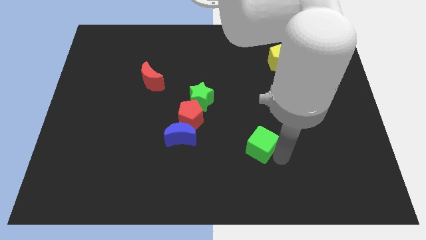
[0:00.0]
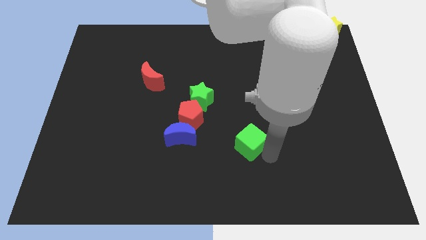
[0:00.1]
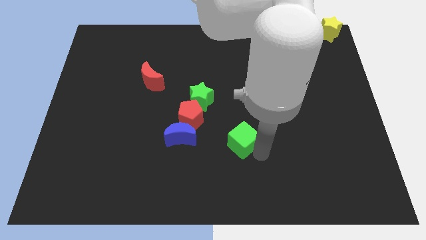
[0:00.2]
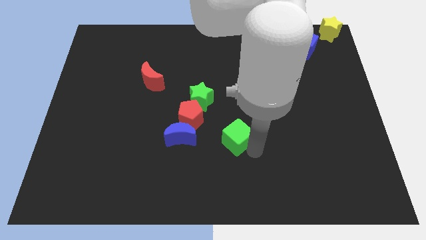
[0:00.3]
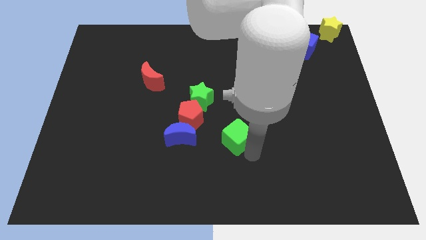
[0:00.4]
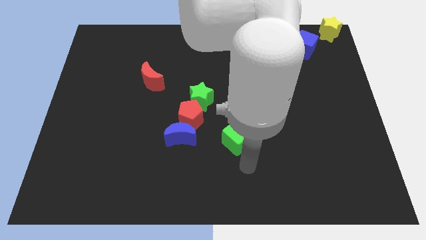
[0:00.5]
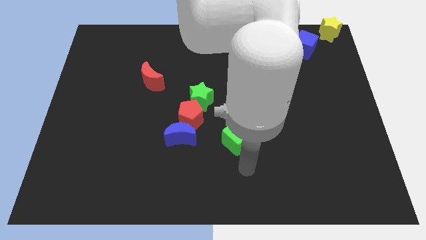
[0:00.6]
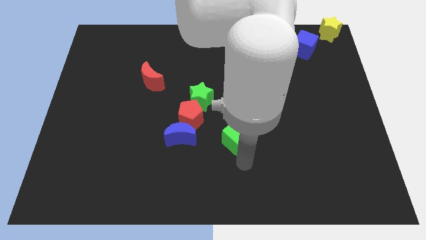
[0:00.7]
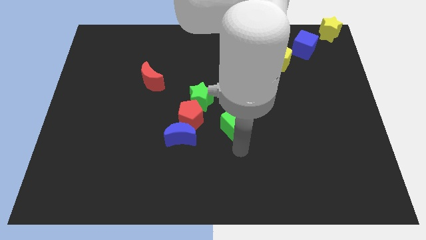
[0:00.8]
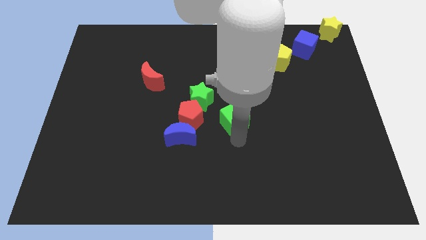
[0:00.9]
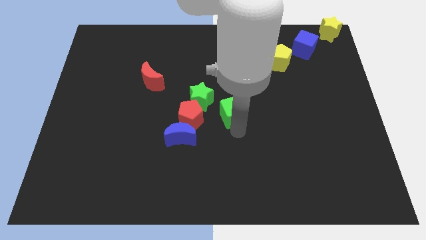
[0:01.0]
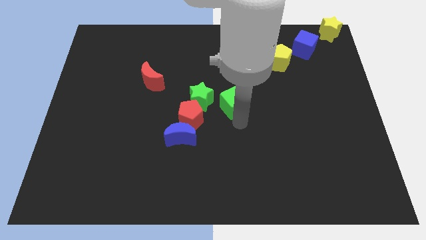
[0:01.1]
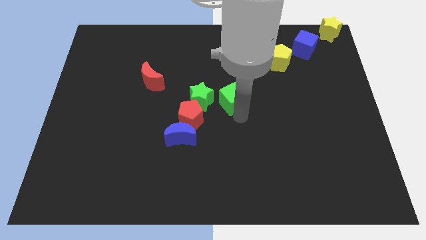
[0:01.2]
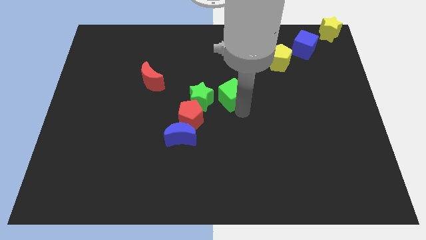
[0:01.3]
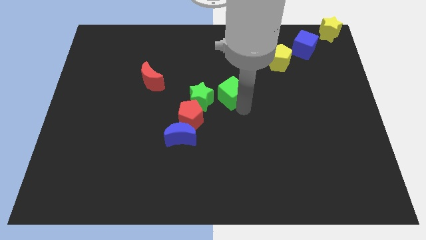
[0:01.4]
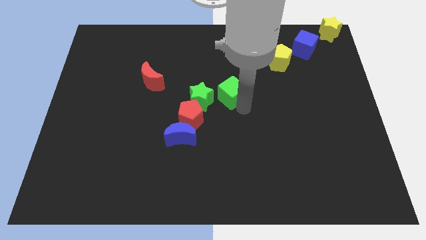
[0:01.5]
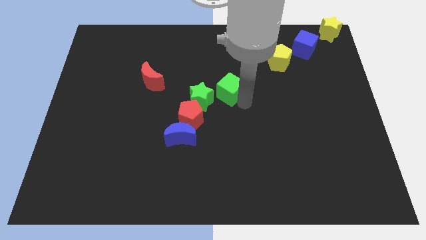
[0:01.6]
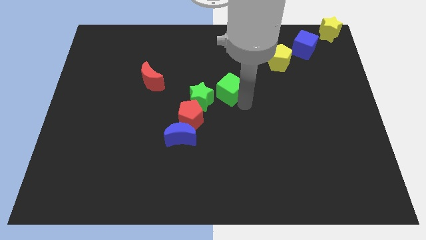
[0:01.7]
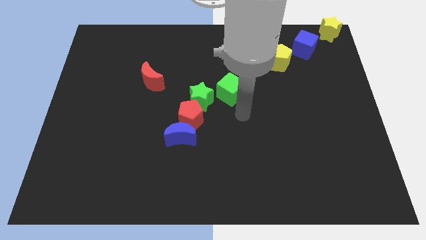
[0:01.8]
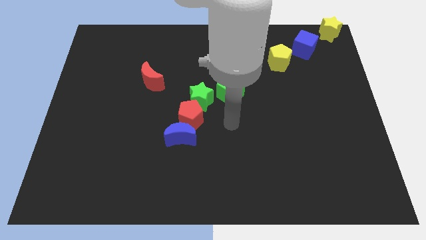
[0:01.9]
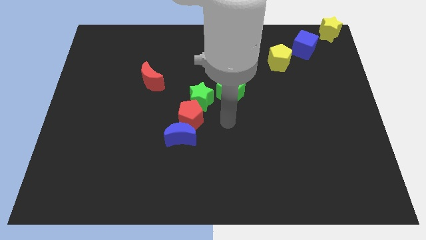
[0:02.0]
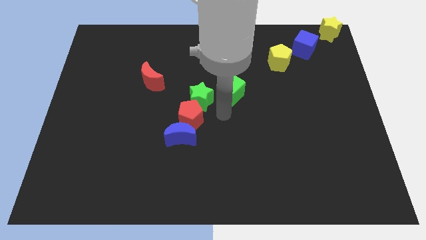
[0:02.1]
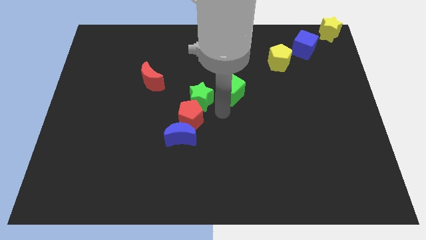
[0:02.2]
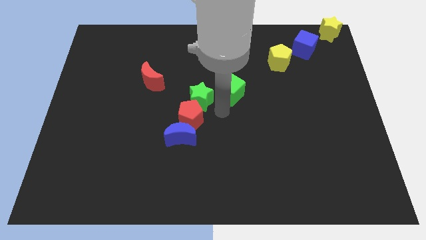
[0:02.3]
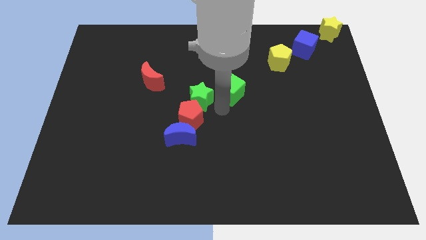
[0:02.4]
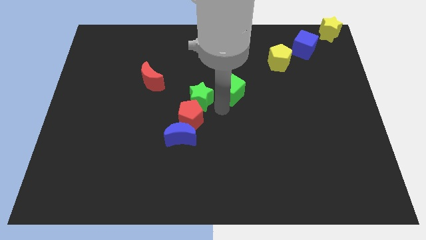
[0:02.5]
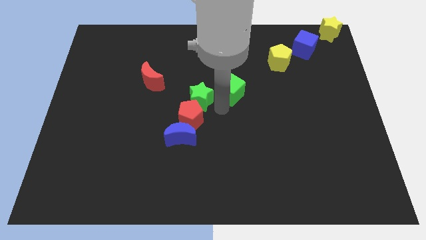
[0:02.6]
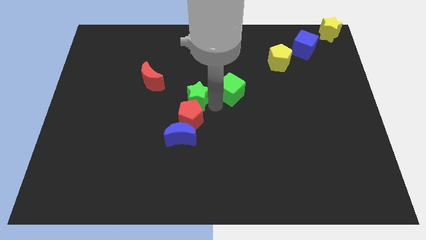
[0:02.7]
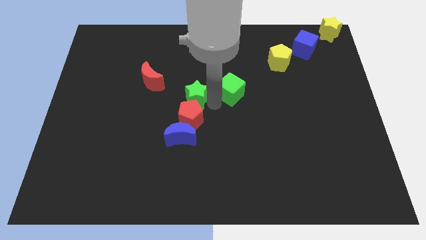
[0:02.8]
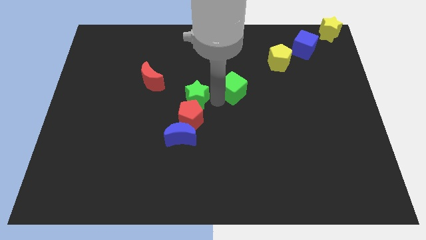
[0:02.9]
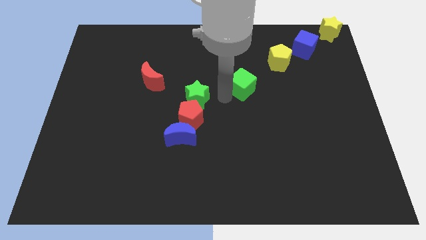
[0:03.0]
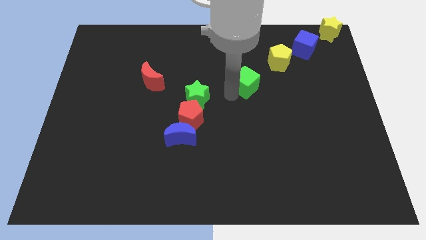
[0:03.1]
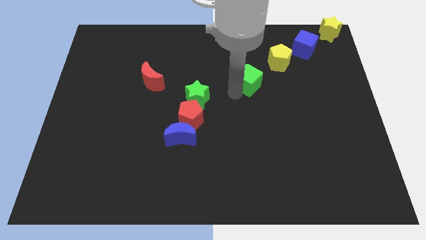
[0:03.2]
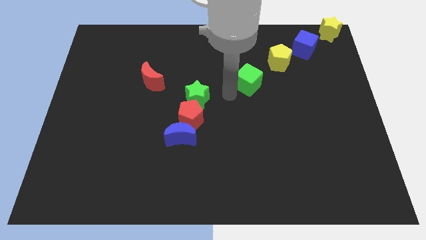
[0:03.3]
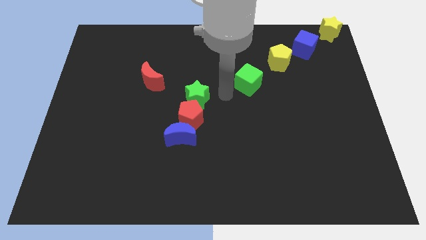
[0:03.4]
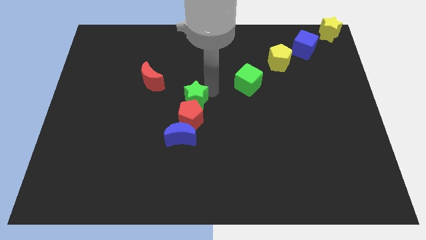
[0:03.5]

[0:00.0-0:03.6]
push green cube diagonal towards yellow pentagon

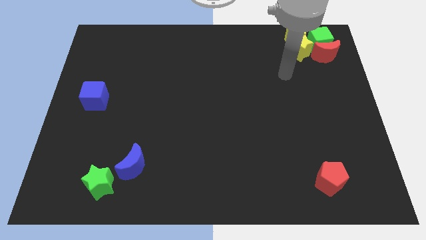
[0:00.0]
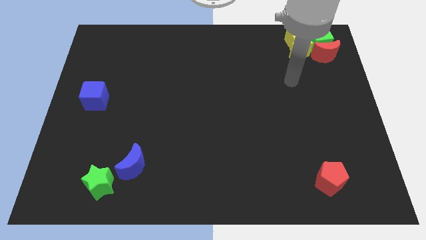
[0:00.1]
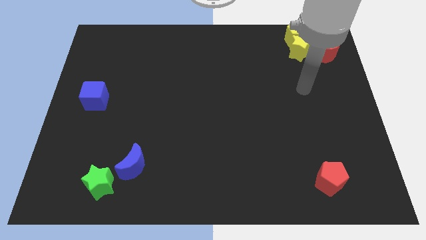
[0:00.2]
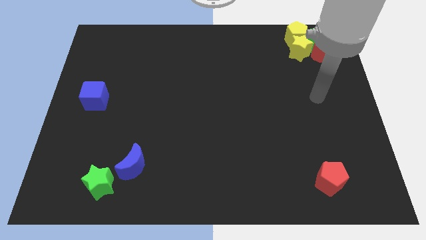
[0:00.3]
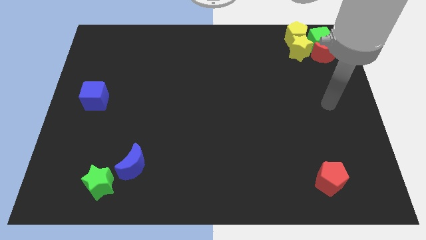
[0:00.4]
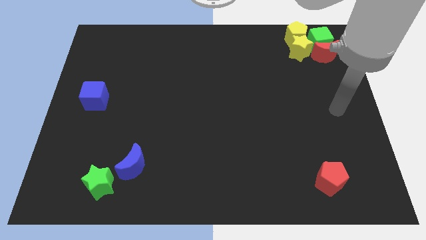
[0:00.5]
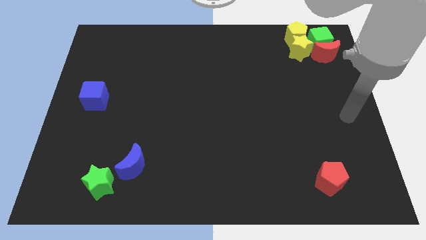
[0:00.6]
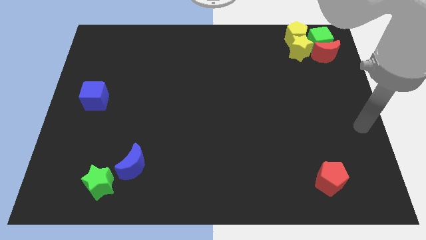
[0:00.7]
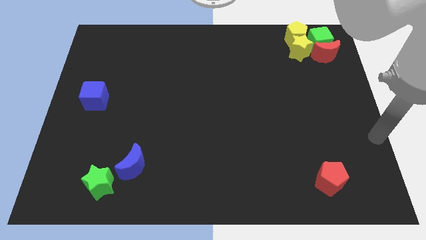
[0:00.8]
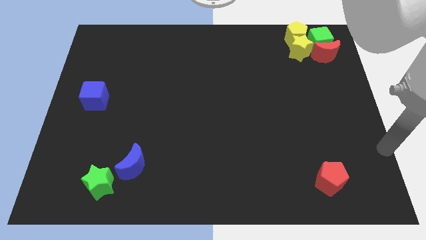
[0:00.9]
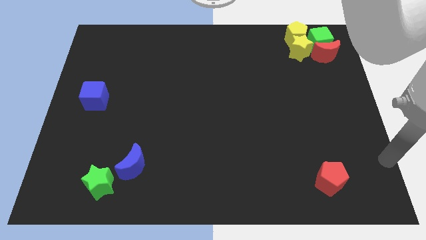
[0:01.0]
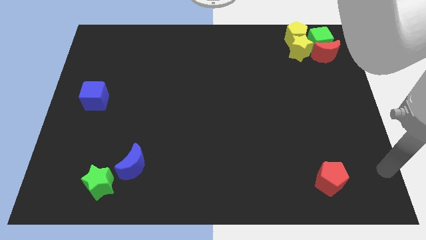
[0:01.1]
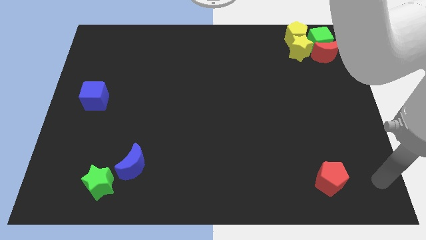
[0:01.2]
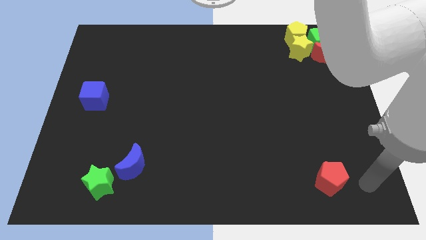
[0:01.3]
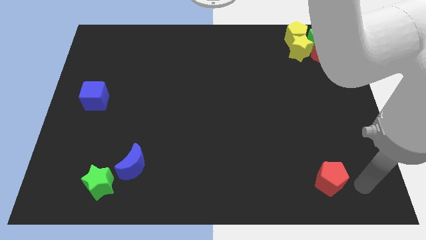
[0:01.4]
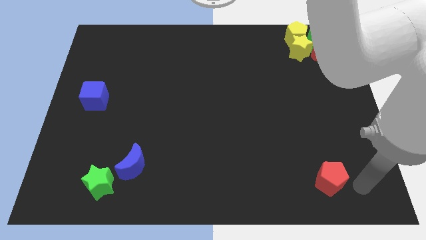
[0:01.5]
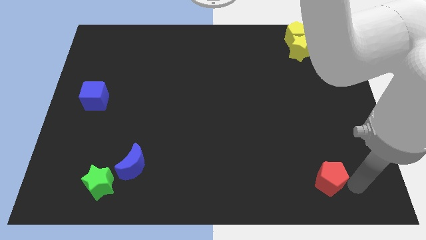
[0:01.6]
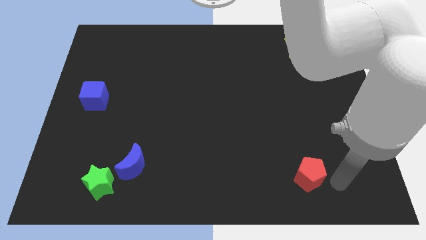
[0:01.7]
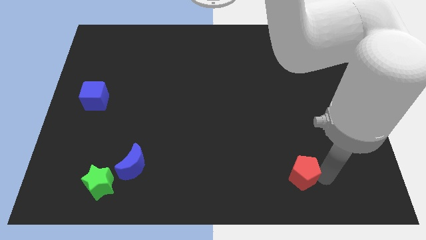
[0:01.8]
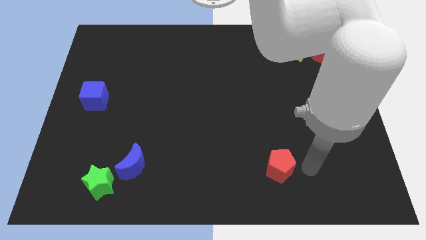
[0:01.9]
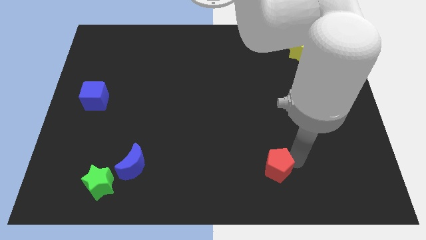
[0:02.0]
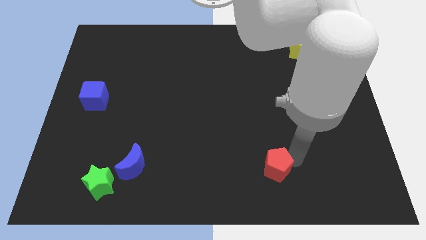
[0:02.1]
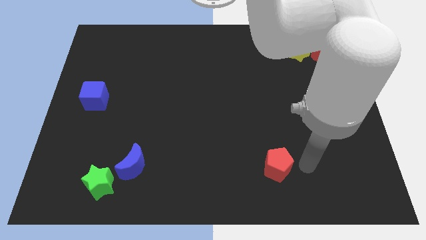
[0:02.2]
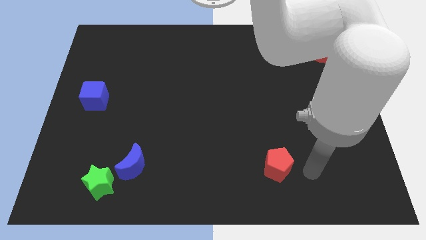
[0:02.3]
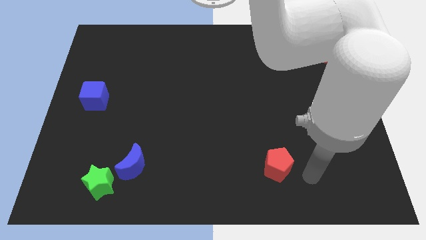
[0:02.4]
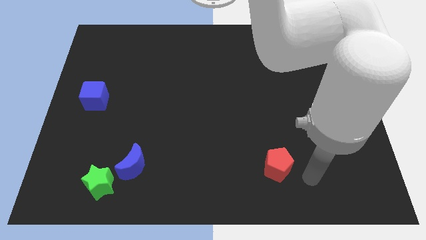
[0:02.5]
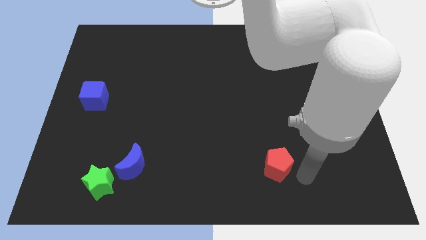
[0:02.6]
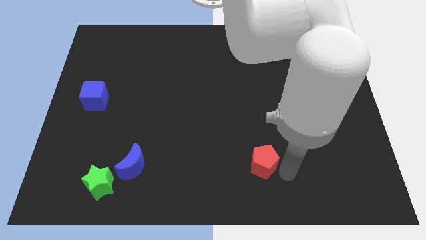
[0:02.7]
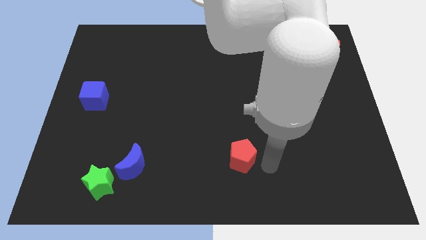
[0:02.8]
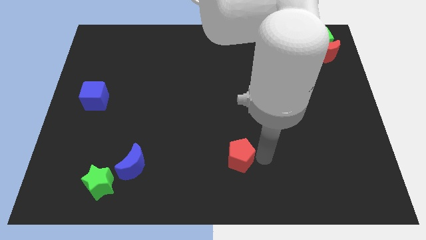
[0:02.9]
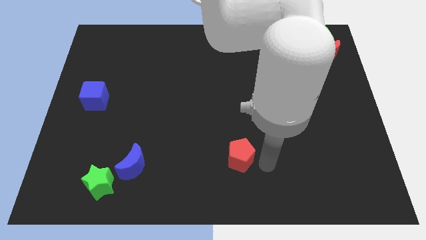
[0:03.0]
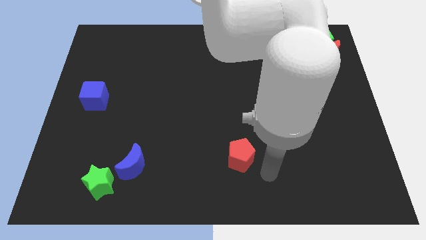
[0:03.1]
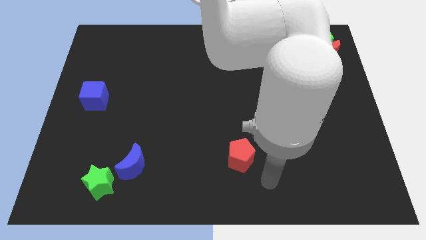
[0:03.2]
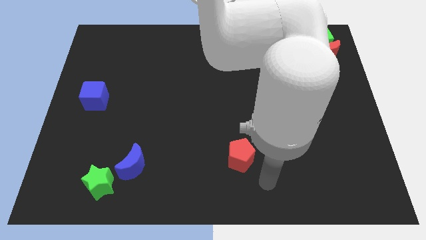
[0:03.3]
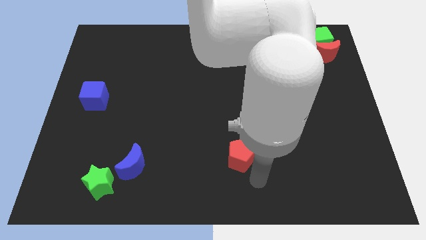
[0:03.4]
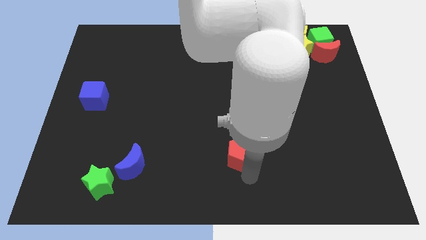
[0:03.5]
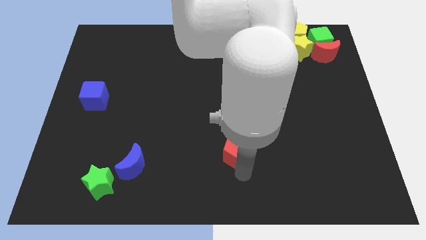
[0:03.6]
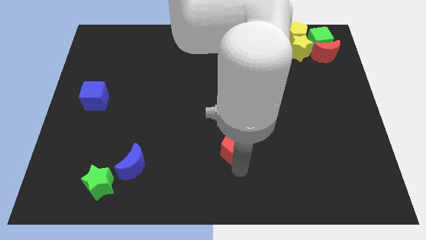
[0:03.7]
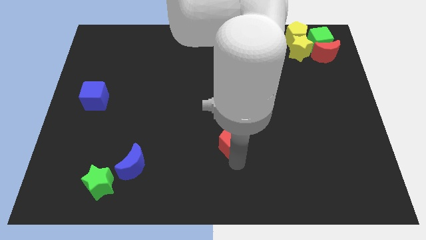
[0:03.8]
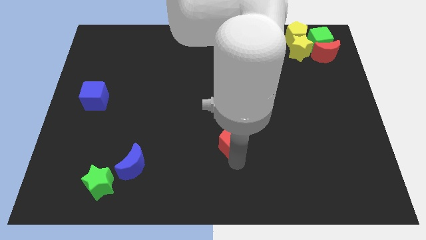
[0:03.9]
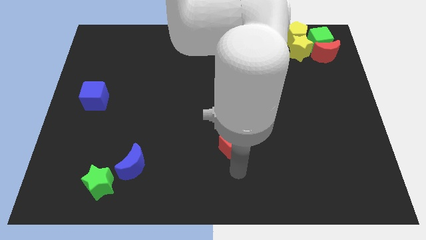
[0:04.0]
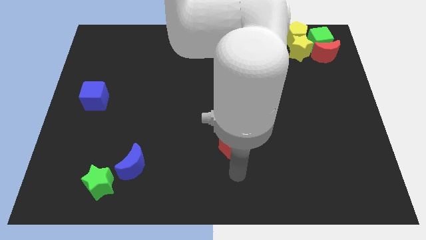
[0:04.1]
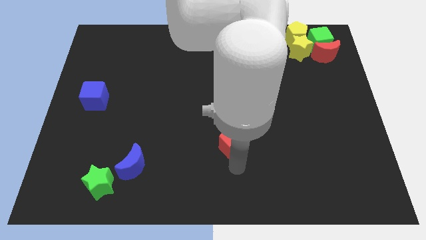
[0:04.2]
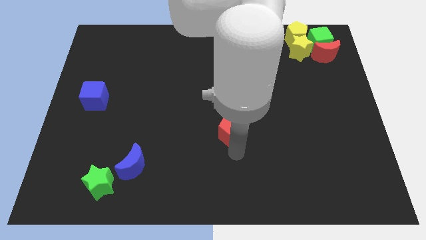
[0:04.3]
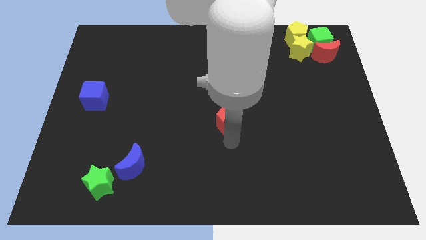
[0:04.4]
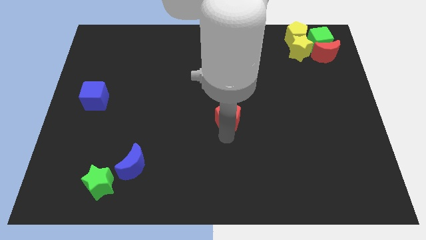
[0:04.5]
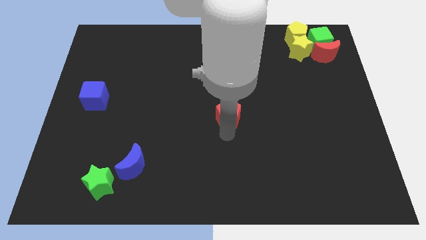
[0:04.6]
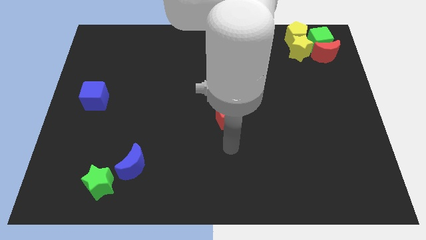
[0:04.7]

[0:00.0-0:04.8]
move the red pentagon to the center of the board

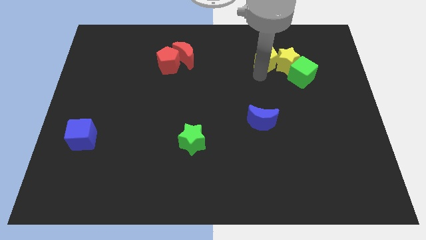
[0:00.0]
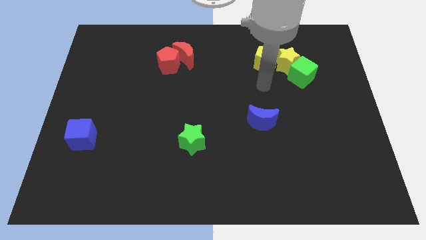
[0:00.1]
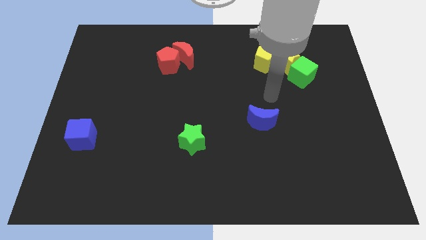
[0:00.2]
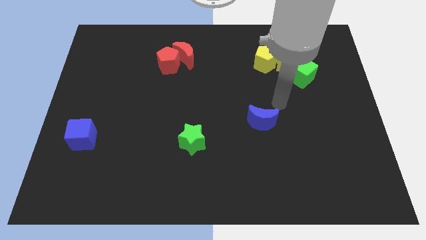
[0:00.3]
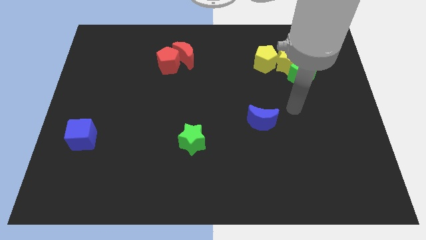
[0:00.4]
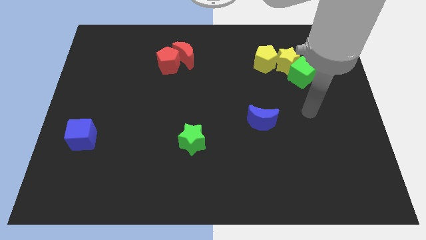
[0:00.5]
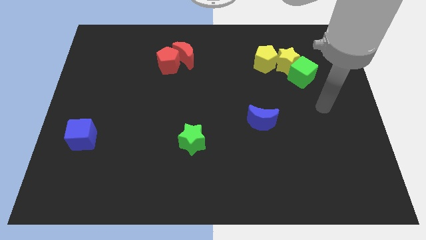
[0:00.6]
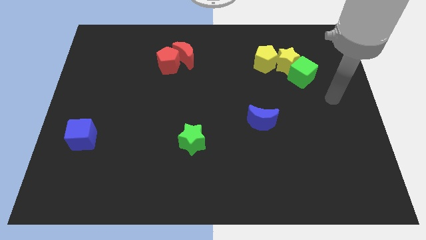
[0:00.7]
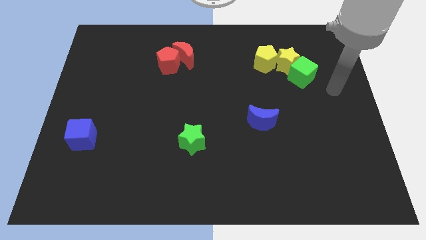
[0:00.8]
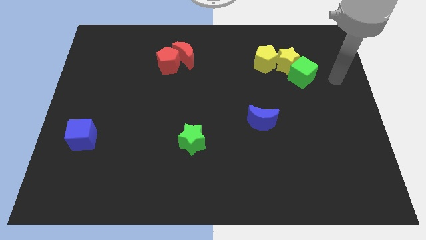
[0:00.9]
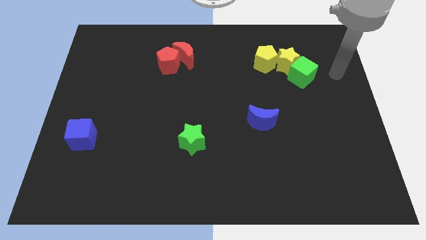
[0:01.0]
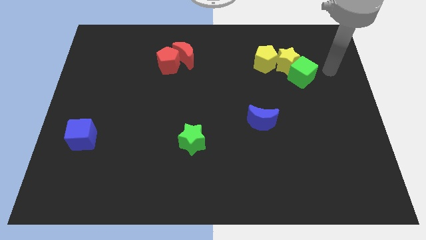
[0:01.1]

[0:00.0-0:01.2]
point your arm at the right of the green cube
